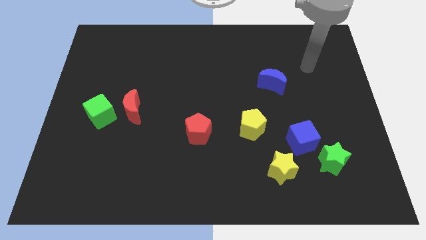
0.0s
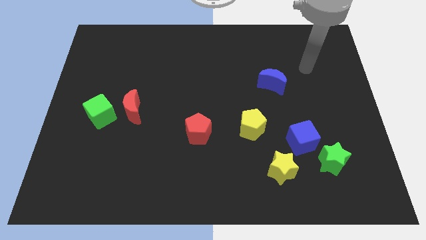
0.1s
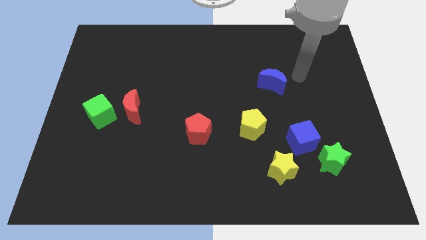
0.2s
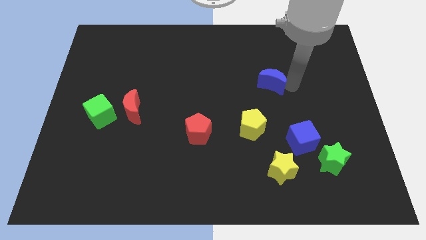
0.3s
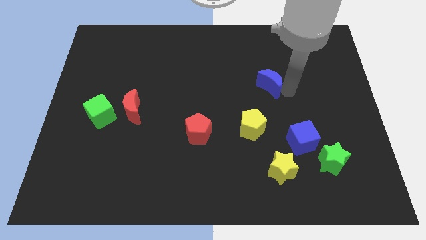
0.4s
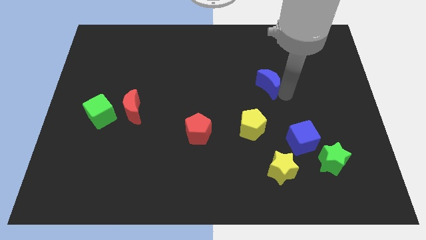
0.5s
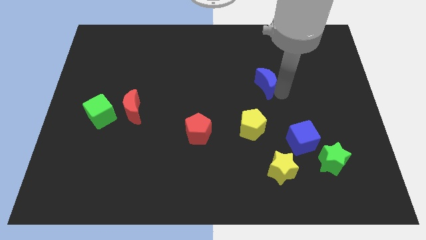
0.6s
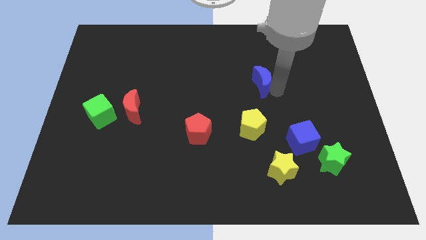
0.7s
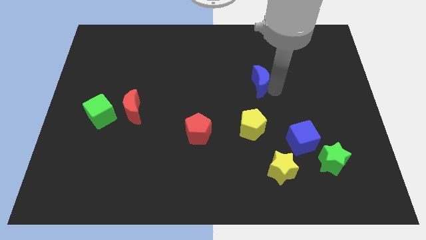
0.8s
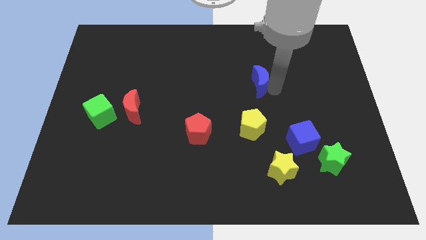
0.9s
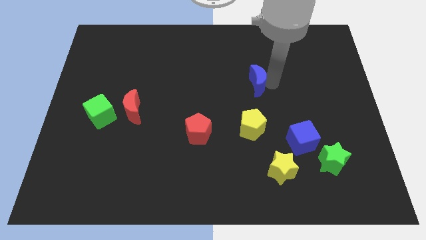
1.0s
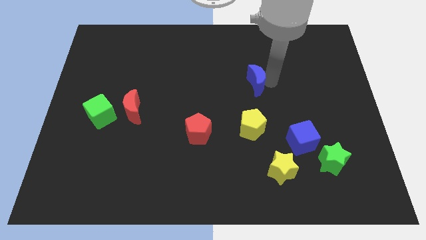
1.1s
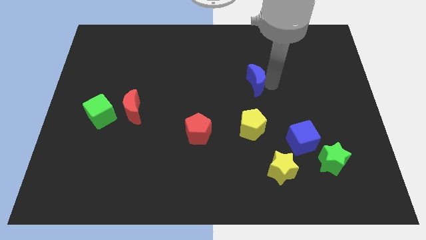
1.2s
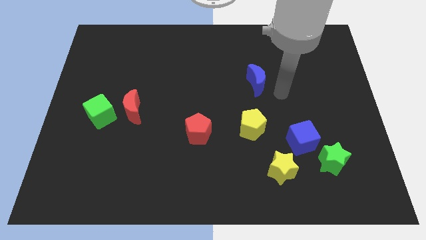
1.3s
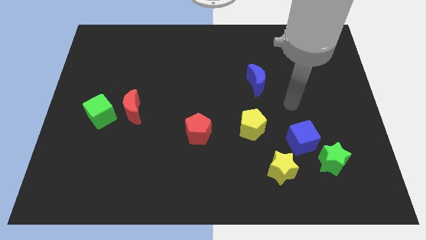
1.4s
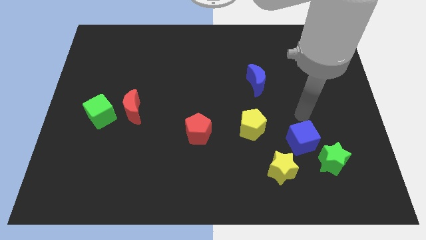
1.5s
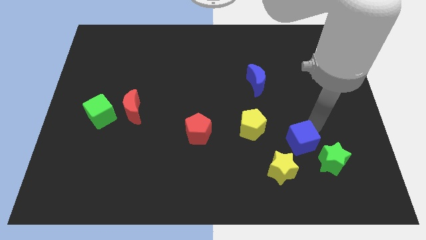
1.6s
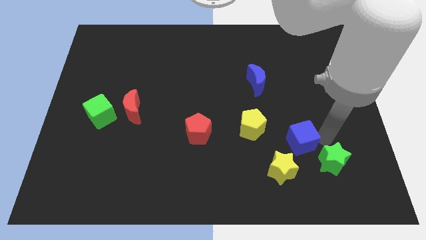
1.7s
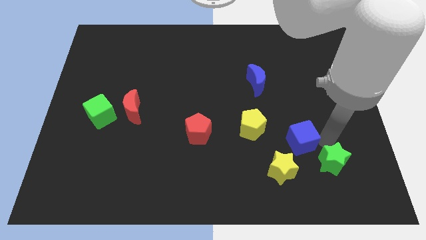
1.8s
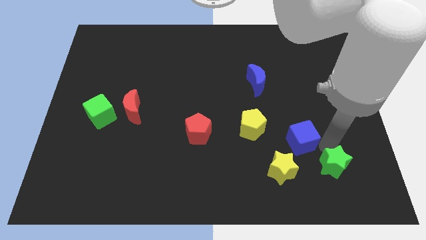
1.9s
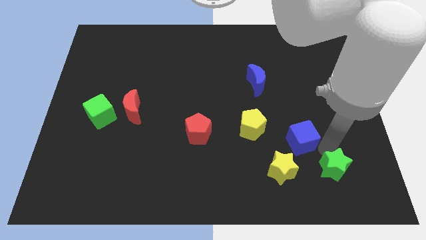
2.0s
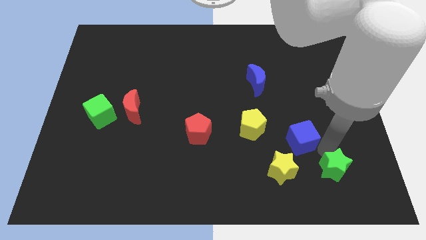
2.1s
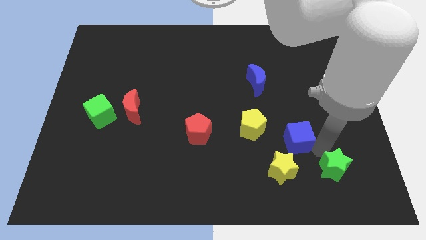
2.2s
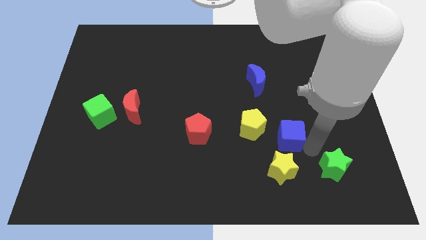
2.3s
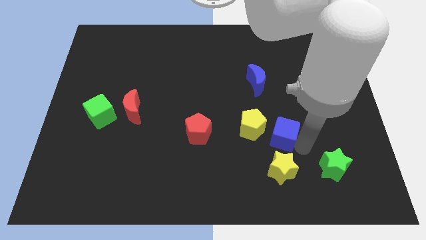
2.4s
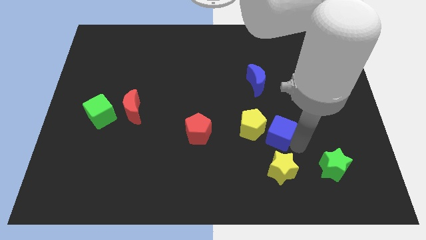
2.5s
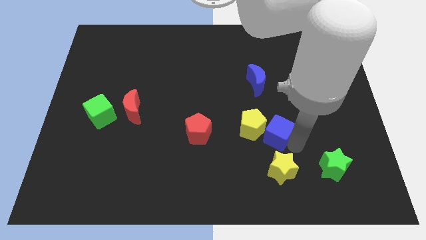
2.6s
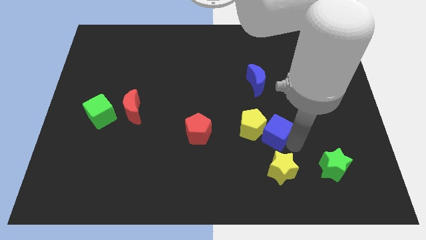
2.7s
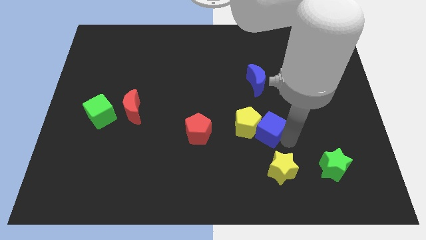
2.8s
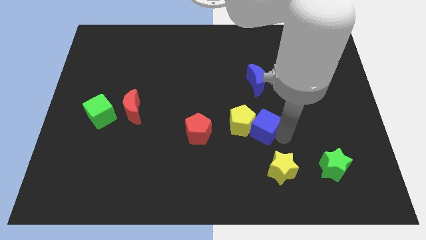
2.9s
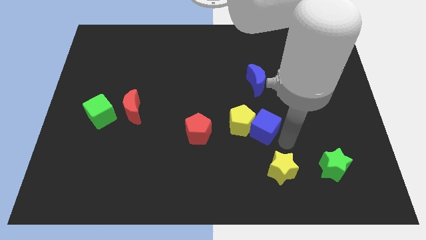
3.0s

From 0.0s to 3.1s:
place the blue crescent vertically above the yellow pentagon and blue cube

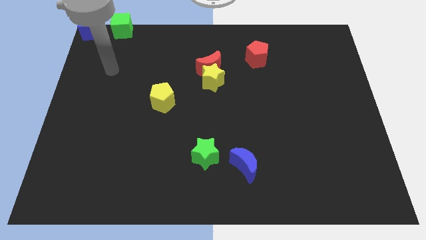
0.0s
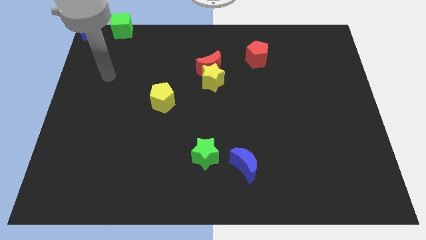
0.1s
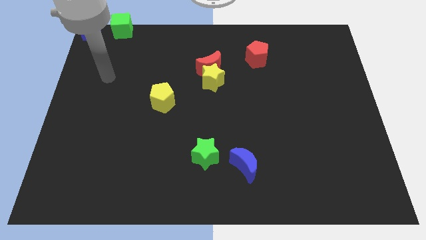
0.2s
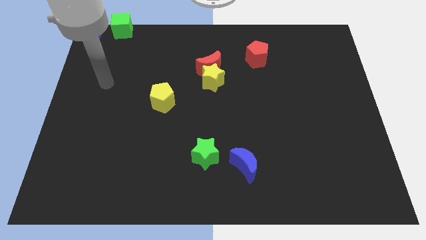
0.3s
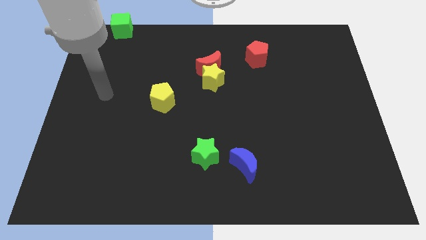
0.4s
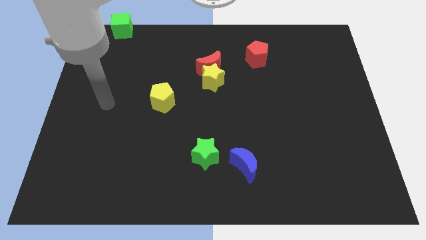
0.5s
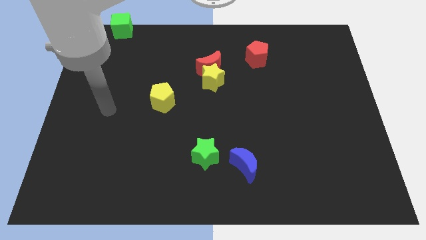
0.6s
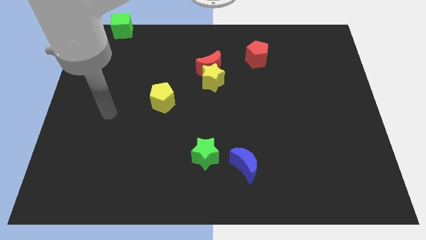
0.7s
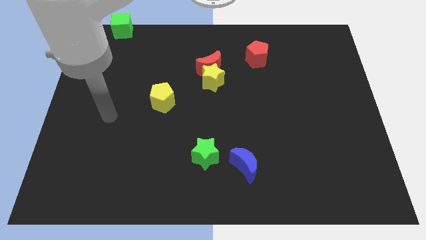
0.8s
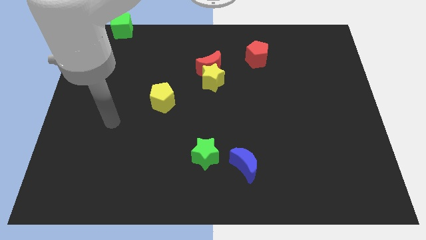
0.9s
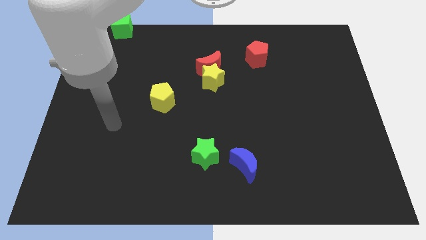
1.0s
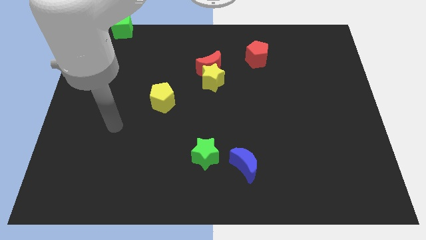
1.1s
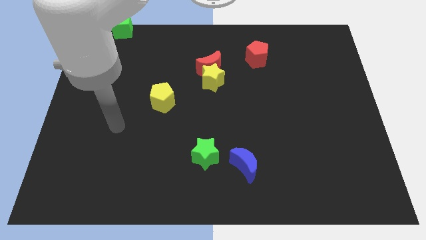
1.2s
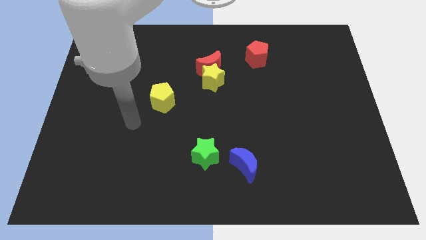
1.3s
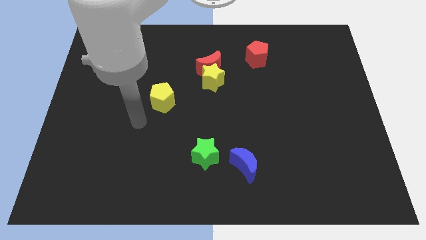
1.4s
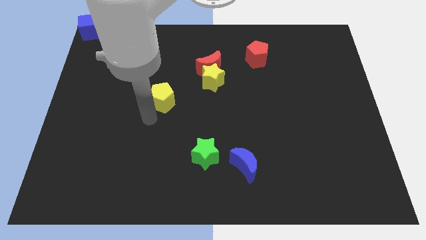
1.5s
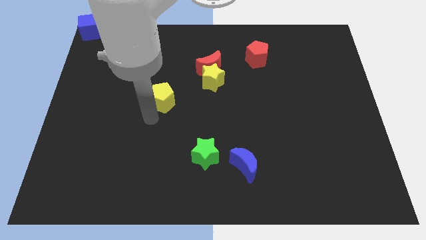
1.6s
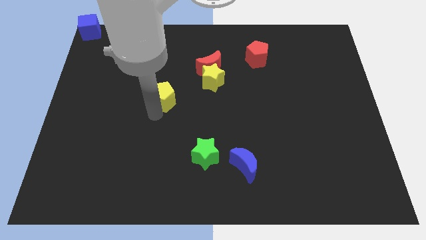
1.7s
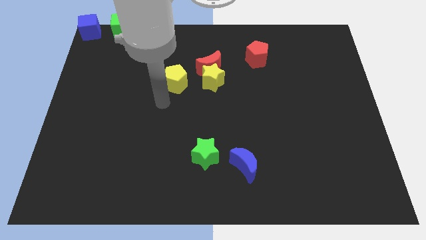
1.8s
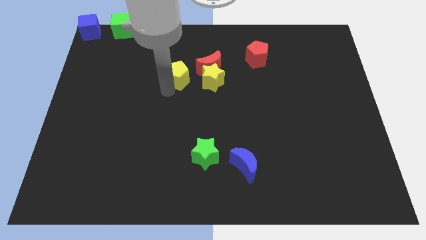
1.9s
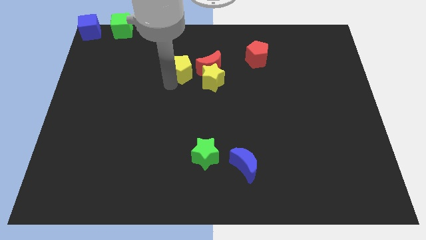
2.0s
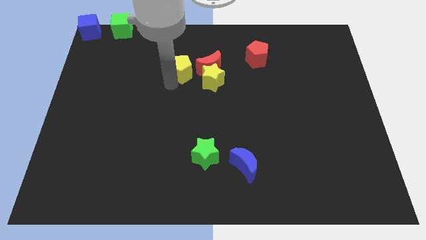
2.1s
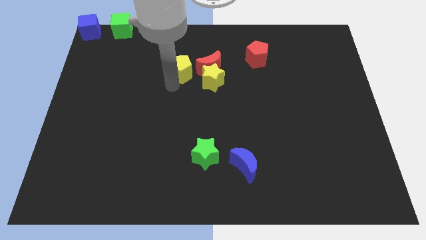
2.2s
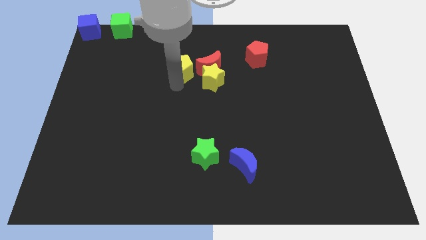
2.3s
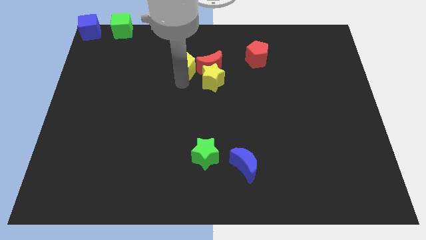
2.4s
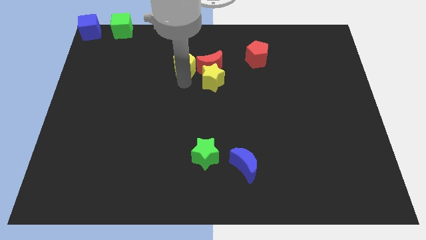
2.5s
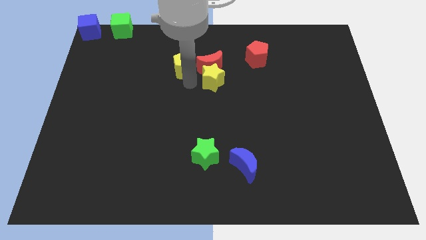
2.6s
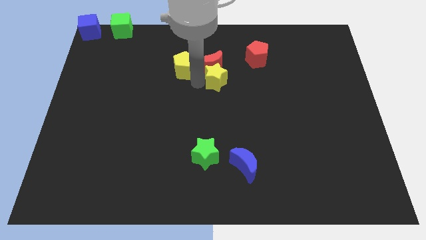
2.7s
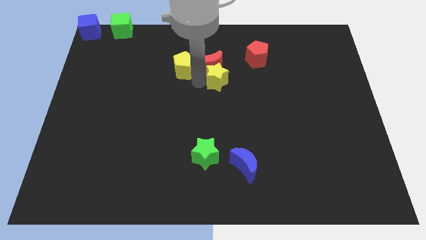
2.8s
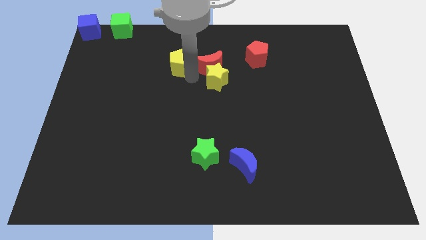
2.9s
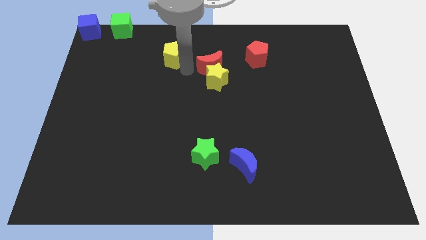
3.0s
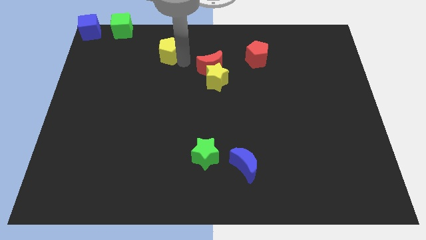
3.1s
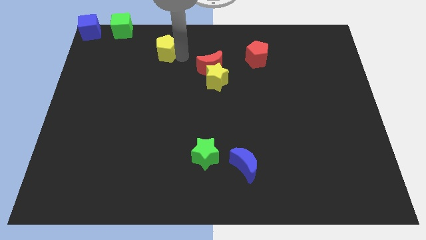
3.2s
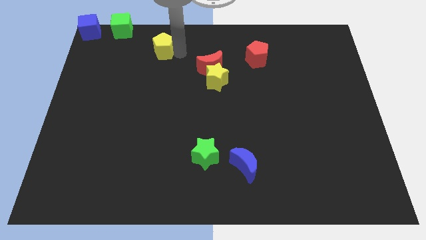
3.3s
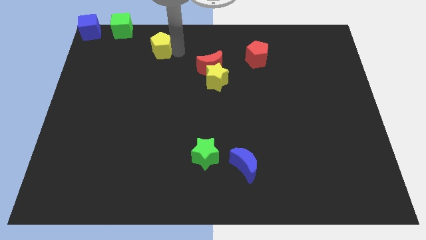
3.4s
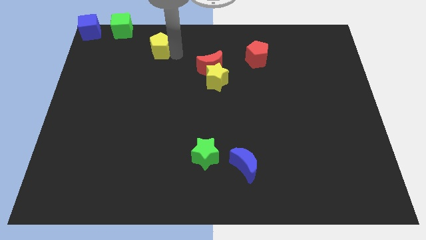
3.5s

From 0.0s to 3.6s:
push the yellow pentagon to the top left of the board

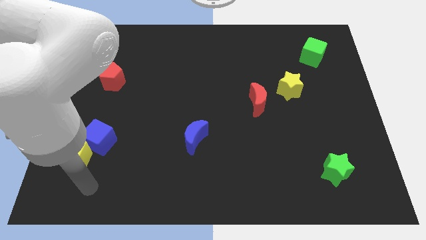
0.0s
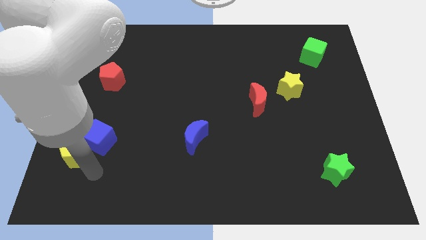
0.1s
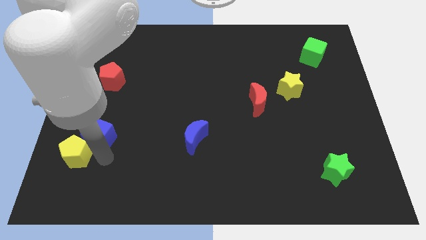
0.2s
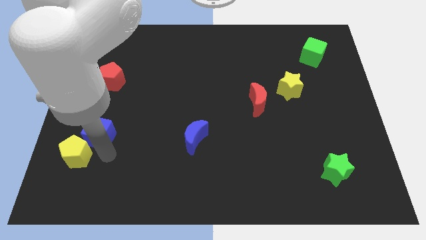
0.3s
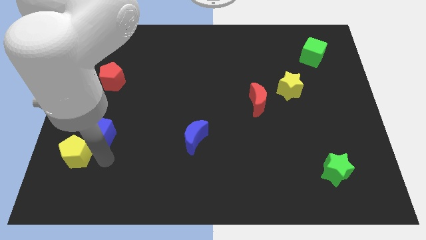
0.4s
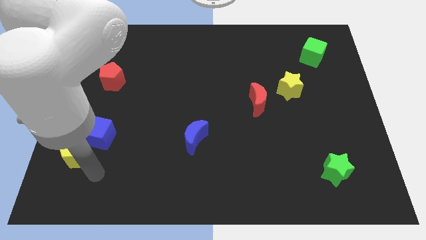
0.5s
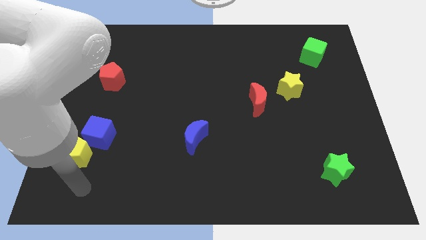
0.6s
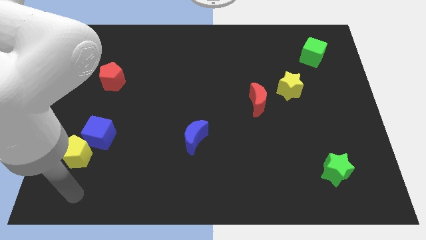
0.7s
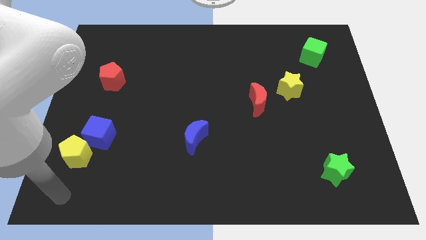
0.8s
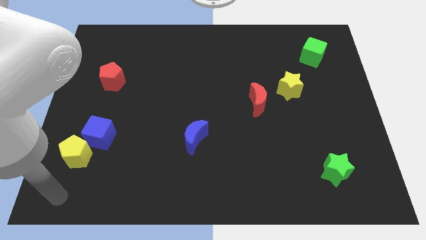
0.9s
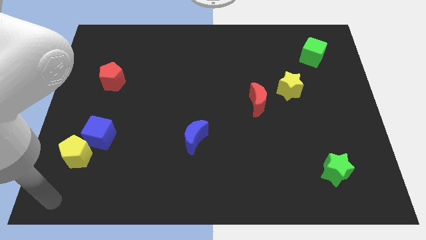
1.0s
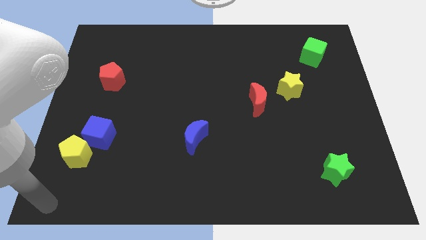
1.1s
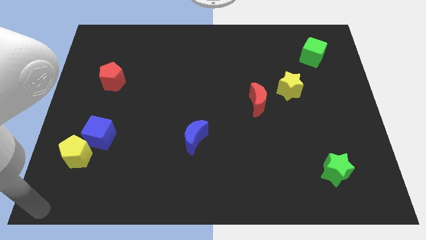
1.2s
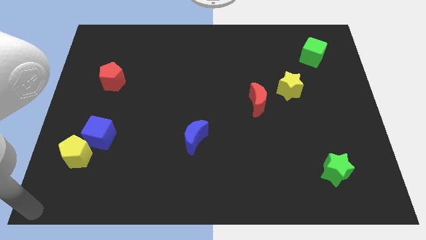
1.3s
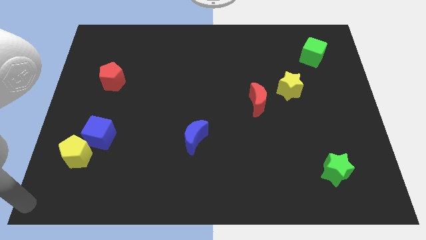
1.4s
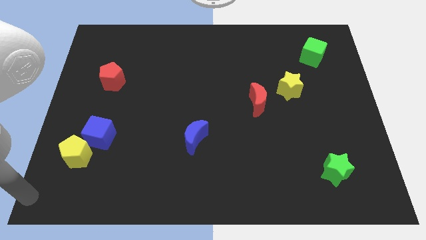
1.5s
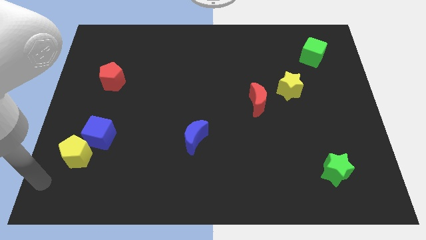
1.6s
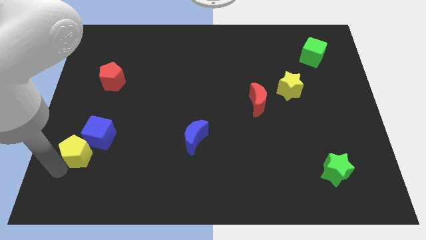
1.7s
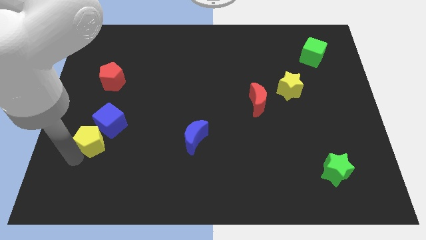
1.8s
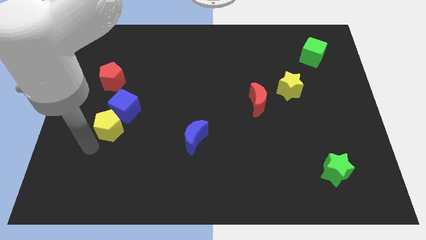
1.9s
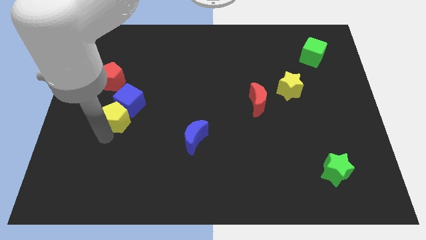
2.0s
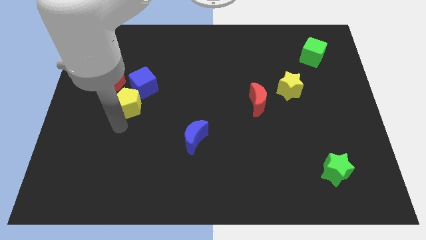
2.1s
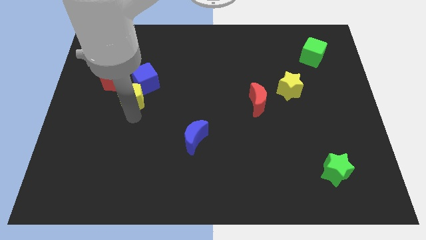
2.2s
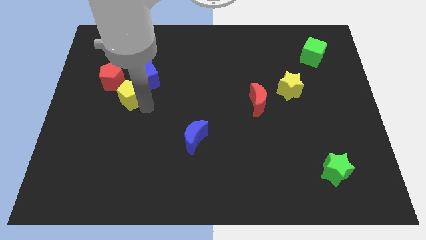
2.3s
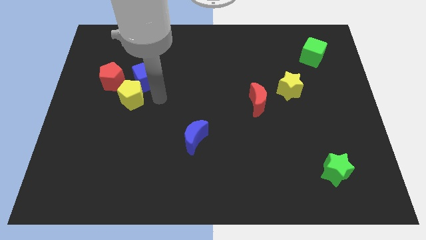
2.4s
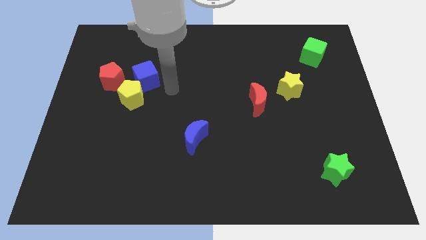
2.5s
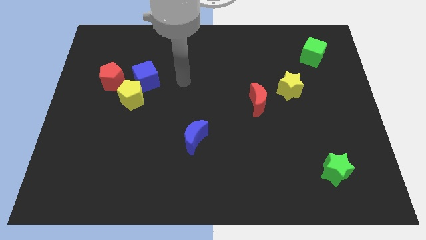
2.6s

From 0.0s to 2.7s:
push the blue cube and yellow pentagon towards the top side of the board
